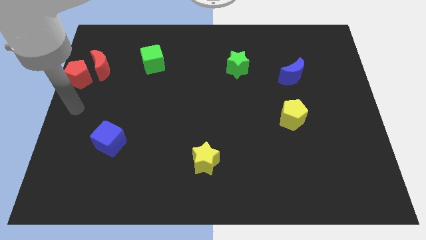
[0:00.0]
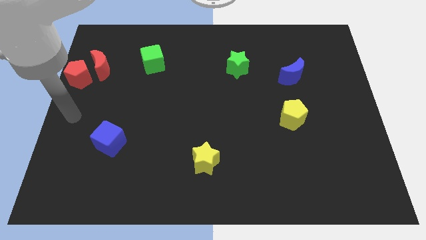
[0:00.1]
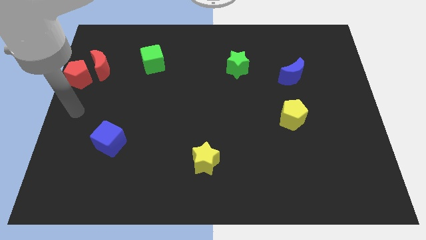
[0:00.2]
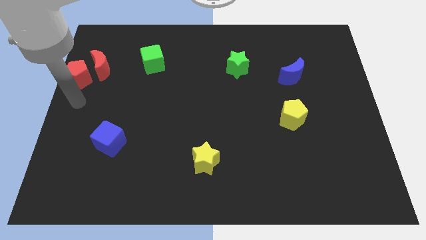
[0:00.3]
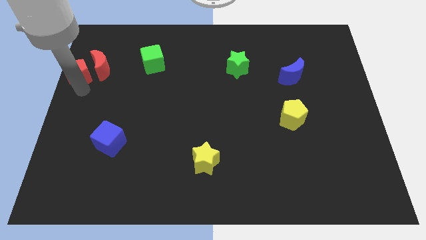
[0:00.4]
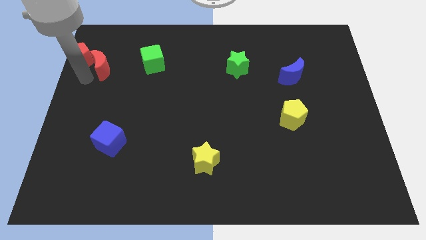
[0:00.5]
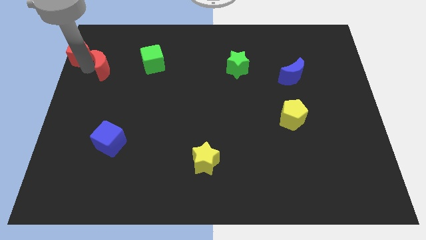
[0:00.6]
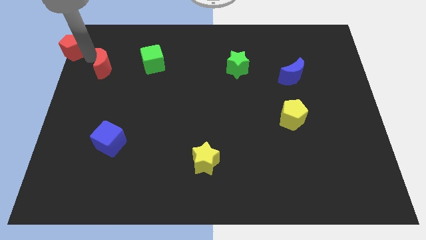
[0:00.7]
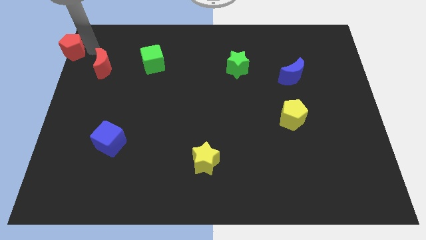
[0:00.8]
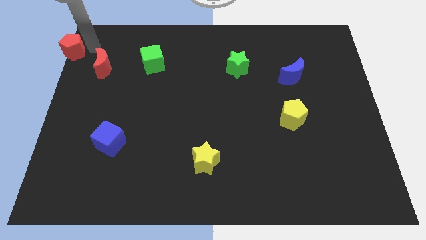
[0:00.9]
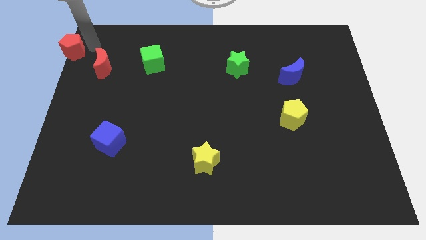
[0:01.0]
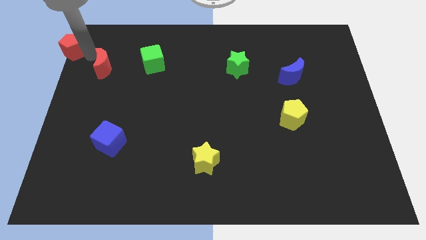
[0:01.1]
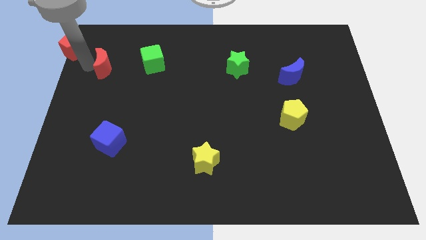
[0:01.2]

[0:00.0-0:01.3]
move red pentagon away from red moon

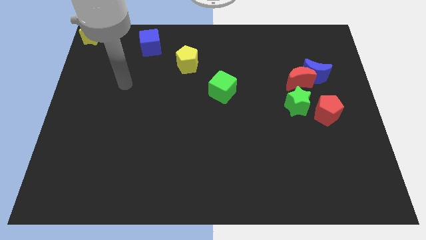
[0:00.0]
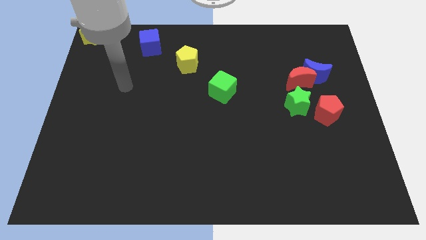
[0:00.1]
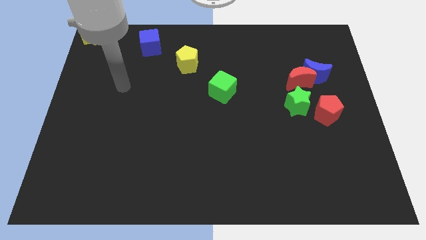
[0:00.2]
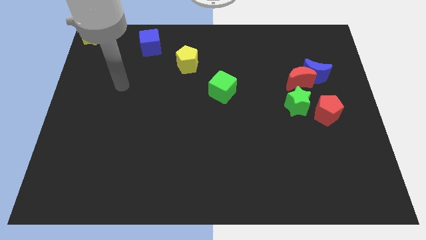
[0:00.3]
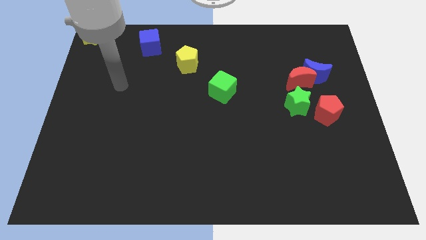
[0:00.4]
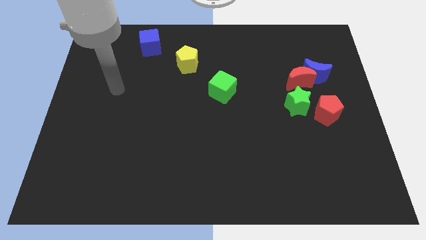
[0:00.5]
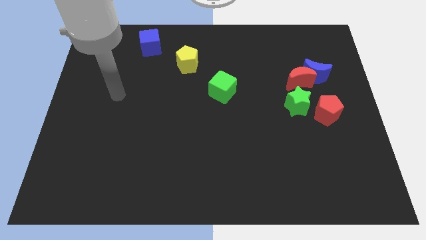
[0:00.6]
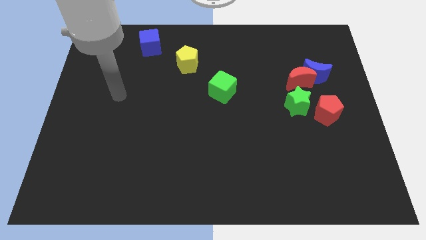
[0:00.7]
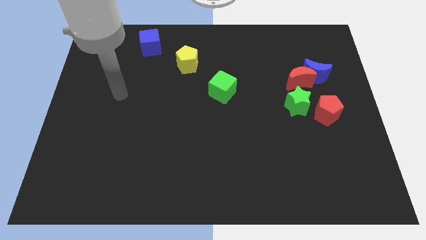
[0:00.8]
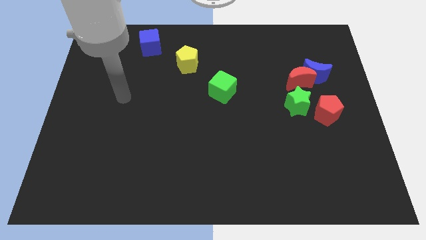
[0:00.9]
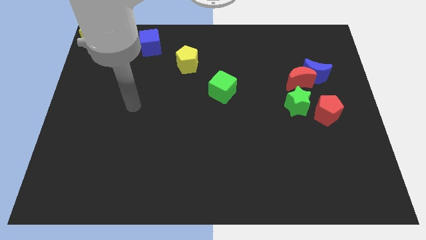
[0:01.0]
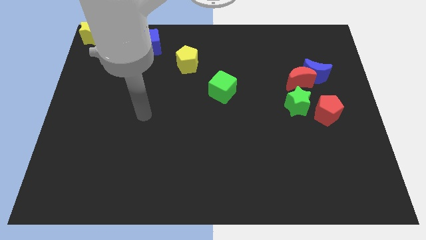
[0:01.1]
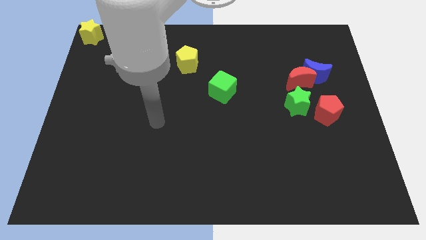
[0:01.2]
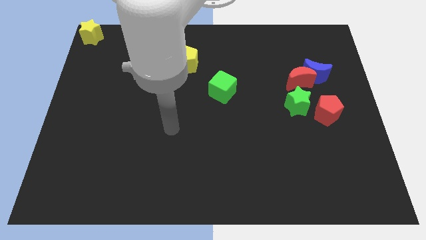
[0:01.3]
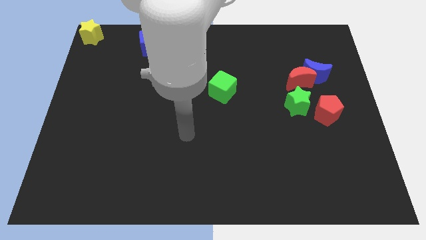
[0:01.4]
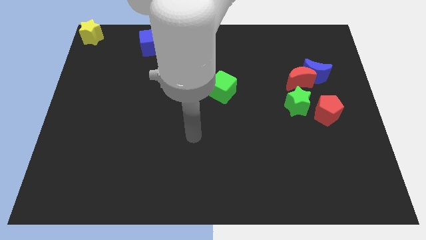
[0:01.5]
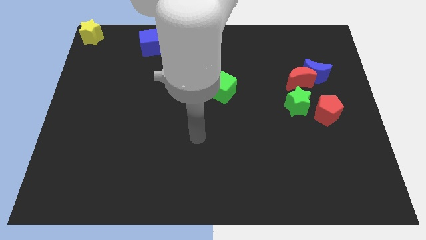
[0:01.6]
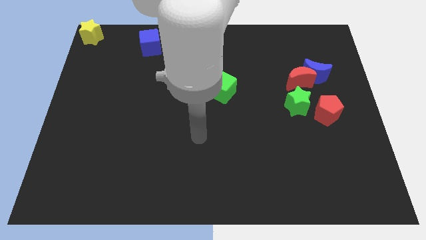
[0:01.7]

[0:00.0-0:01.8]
point your arm at the center of the board

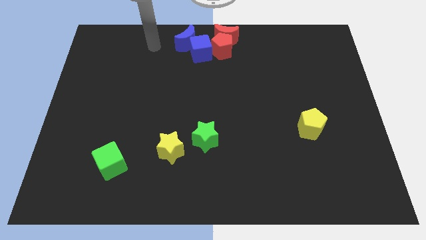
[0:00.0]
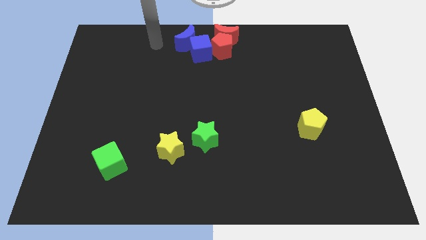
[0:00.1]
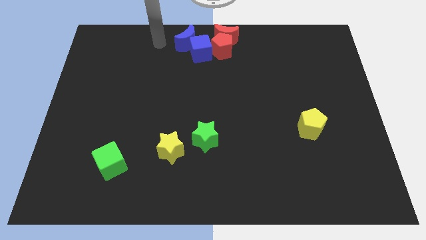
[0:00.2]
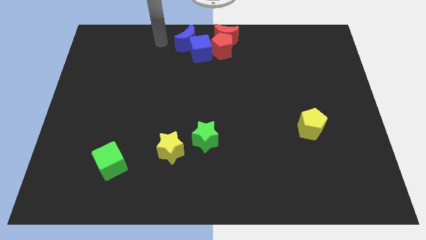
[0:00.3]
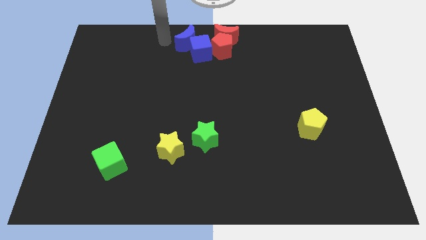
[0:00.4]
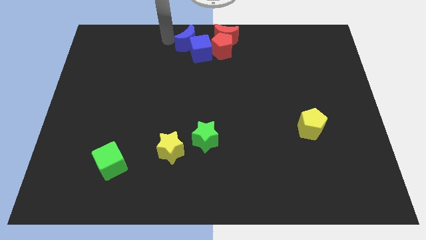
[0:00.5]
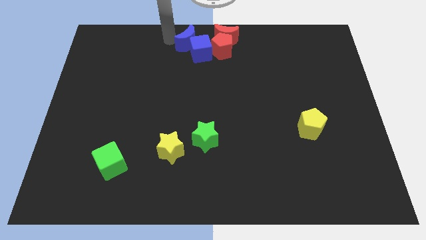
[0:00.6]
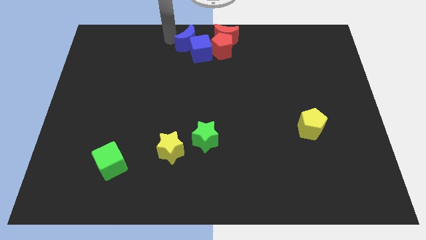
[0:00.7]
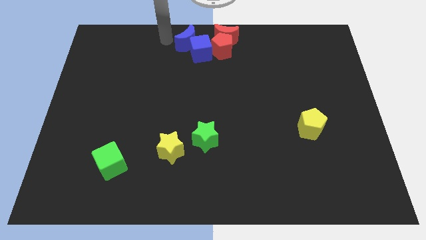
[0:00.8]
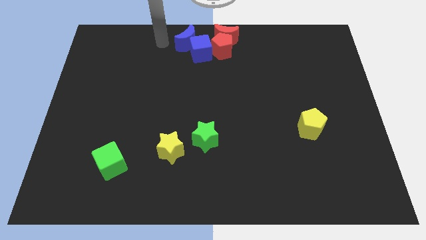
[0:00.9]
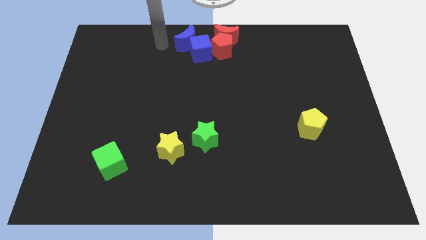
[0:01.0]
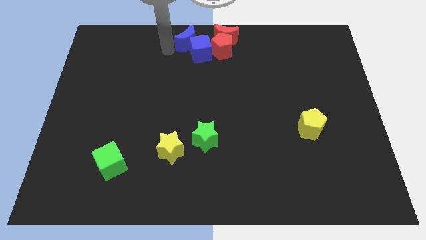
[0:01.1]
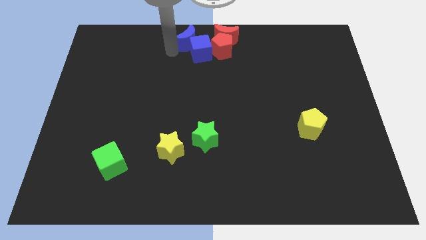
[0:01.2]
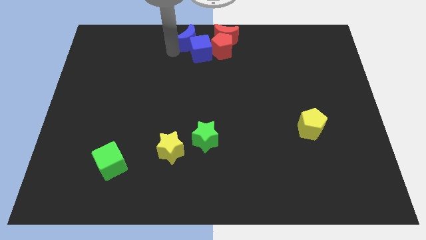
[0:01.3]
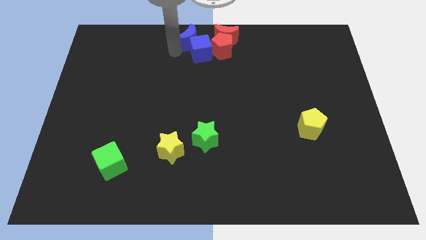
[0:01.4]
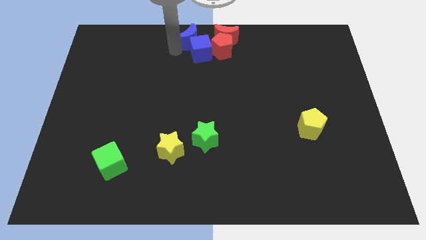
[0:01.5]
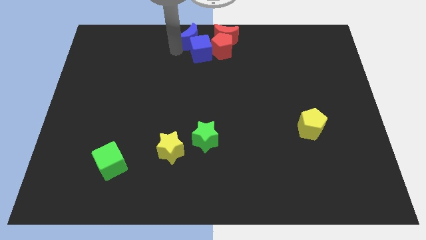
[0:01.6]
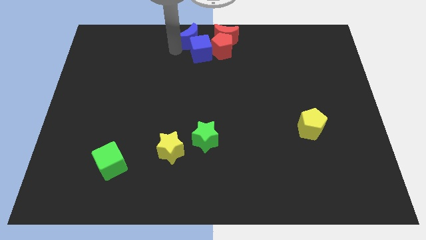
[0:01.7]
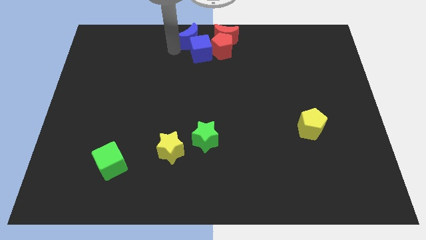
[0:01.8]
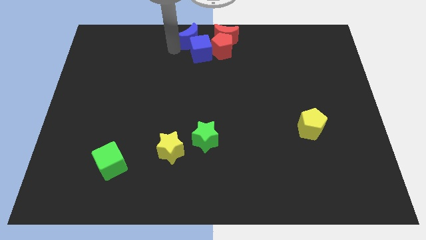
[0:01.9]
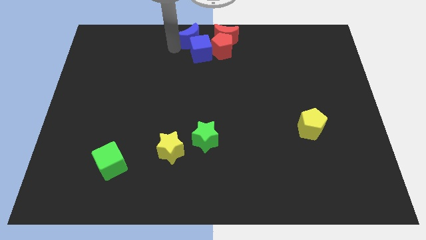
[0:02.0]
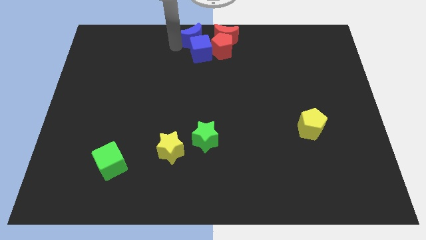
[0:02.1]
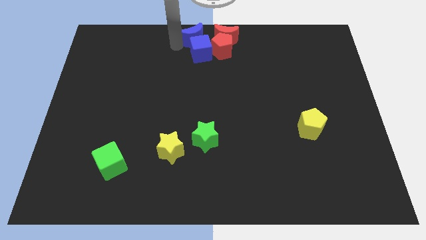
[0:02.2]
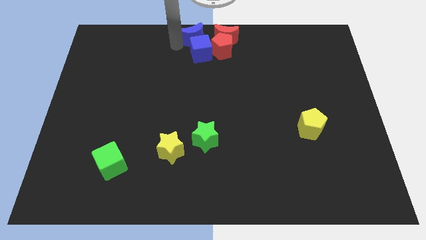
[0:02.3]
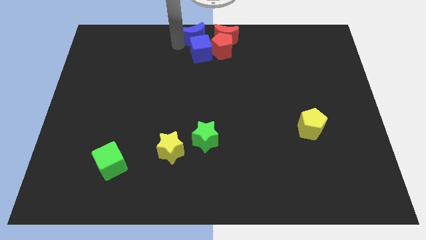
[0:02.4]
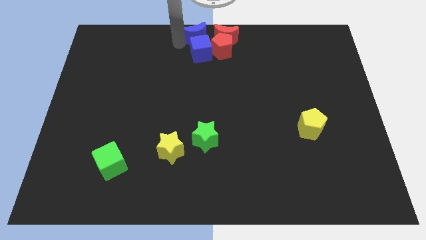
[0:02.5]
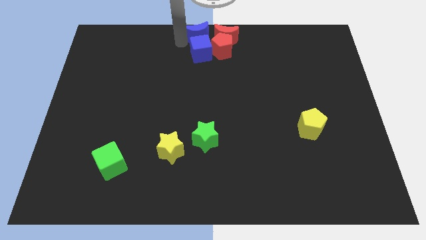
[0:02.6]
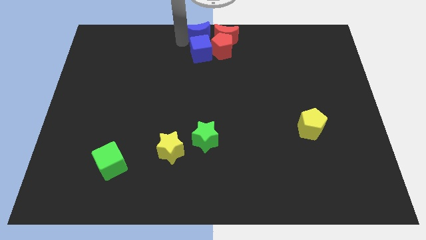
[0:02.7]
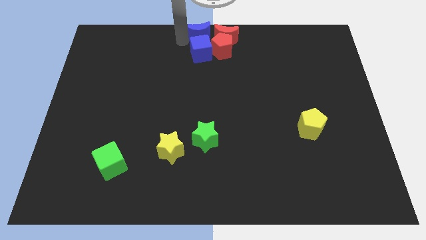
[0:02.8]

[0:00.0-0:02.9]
push the blue crescent to the top of the blue cube

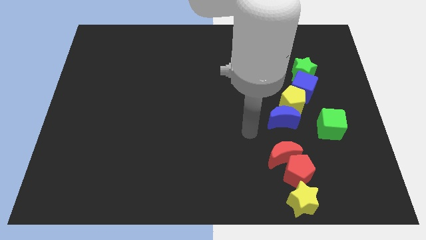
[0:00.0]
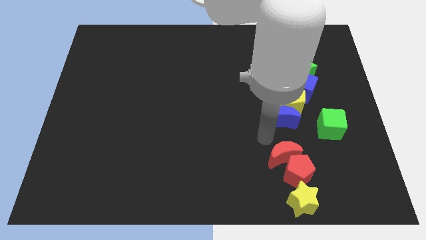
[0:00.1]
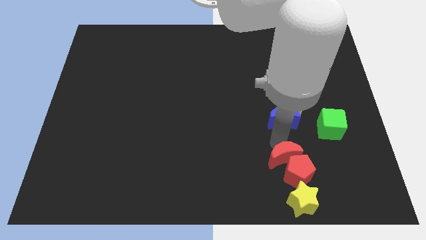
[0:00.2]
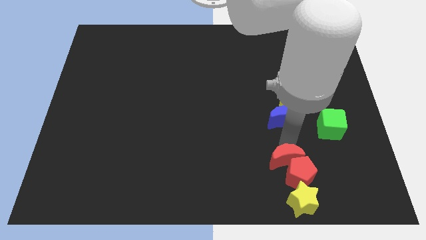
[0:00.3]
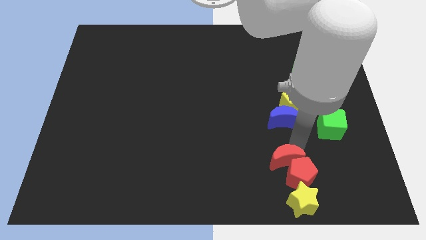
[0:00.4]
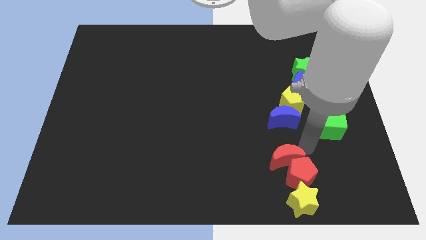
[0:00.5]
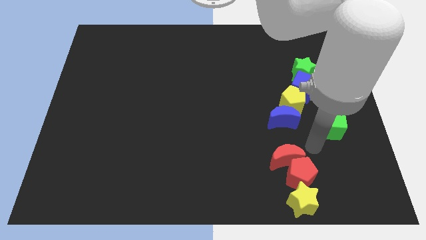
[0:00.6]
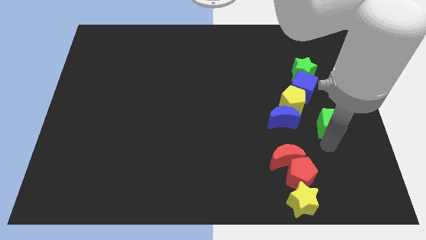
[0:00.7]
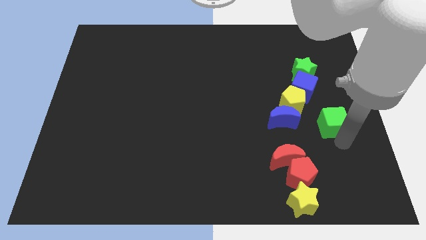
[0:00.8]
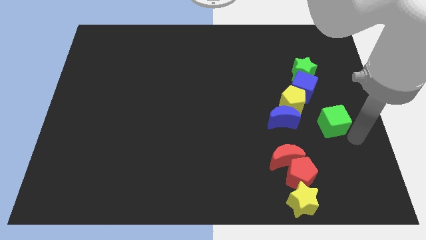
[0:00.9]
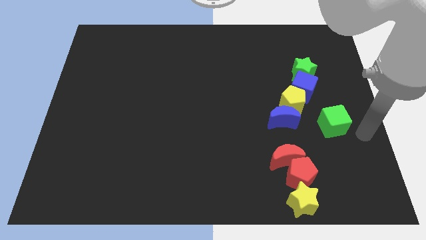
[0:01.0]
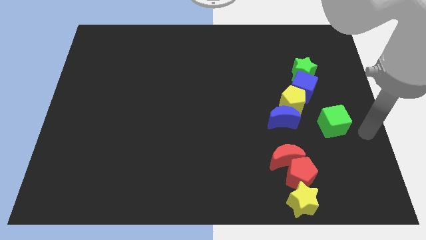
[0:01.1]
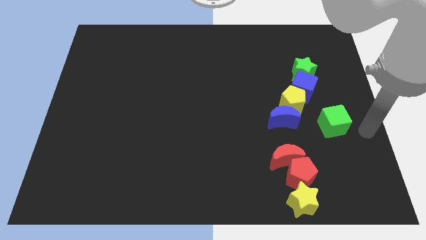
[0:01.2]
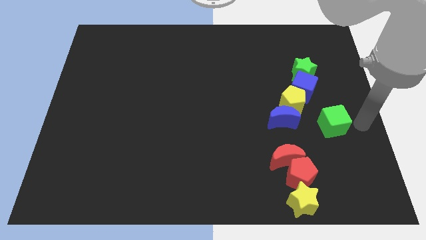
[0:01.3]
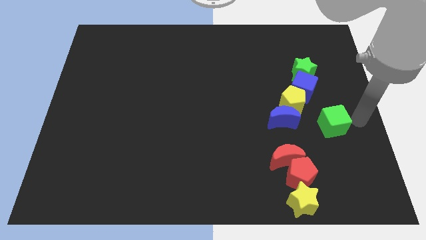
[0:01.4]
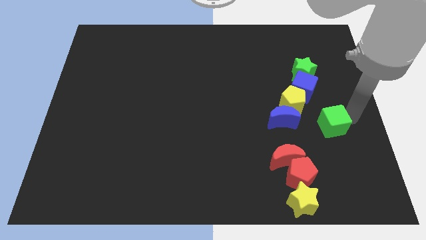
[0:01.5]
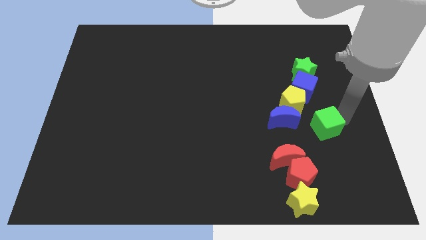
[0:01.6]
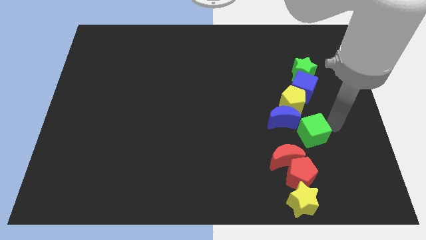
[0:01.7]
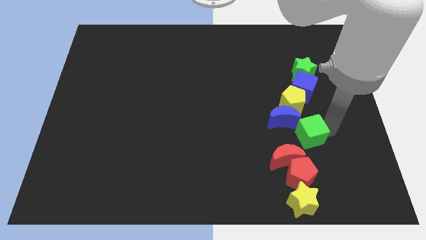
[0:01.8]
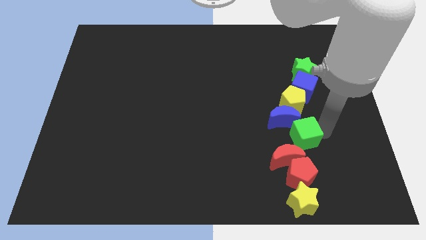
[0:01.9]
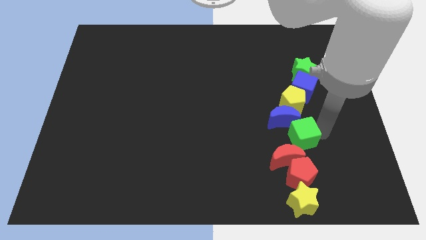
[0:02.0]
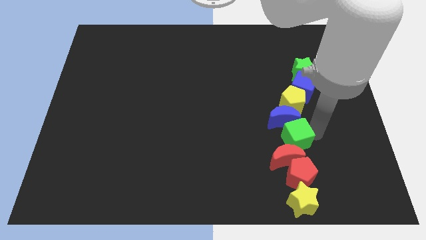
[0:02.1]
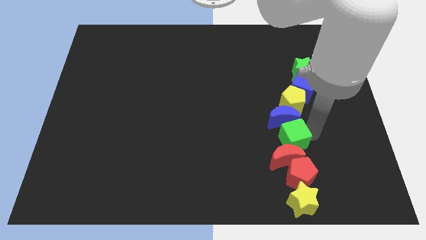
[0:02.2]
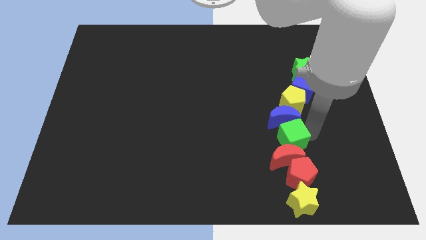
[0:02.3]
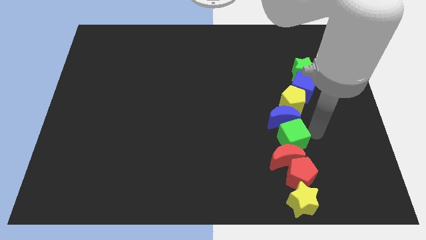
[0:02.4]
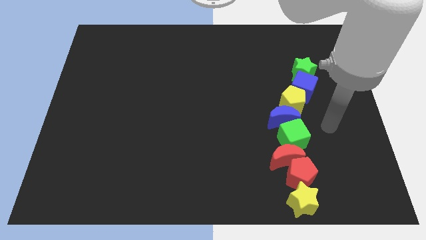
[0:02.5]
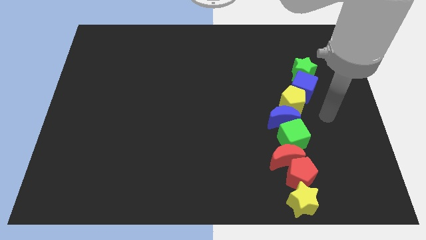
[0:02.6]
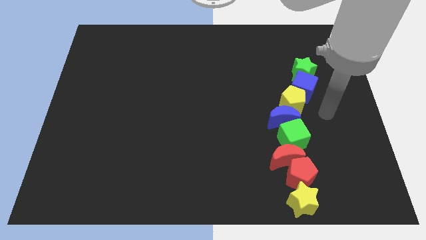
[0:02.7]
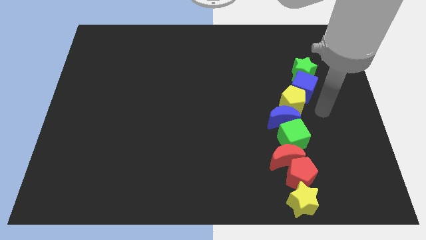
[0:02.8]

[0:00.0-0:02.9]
push the green cube into the vertical line of blocks
